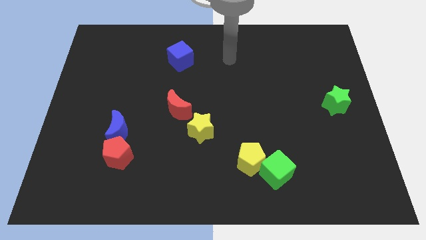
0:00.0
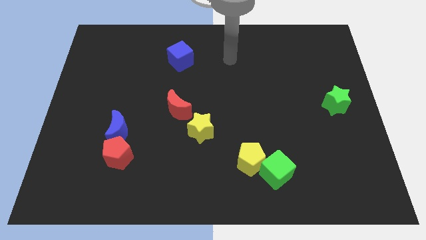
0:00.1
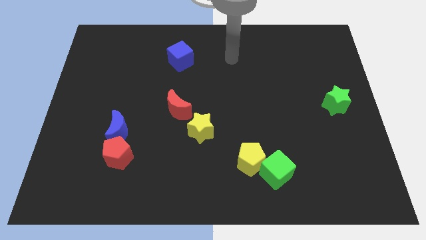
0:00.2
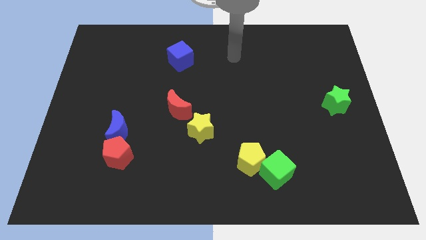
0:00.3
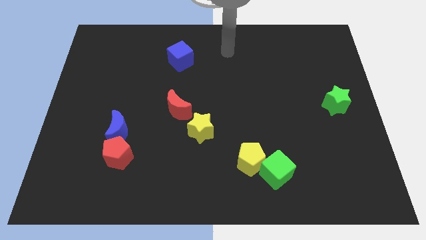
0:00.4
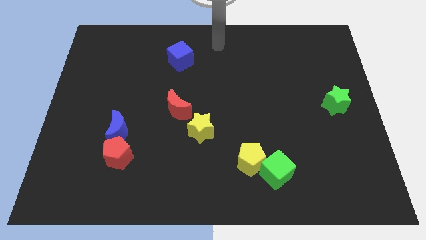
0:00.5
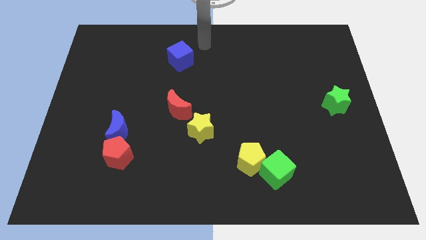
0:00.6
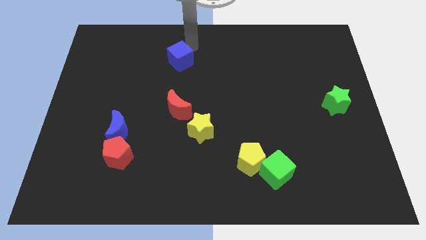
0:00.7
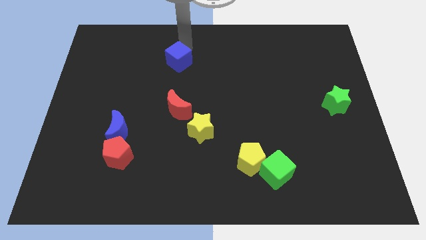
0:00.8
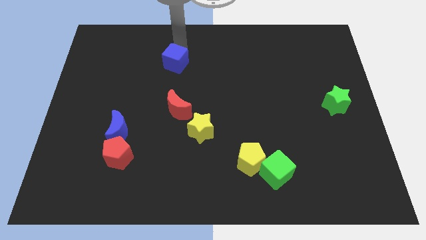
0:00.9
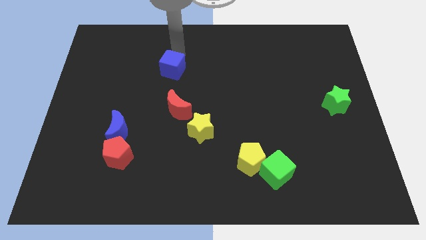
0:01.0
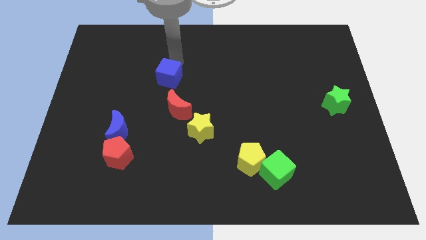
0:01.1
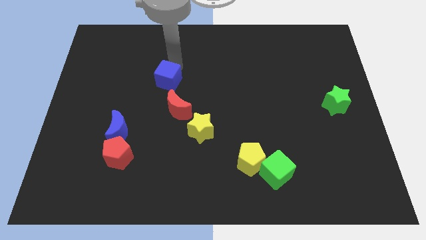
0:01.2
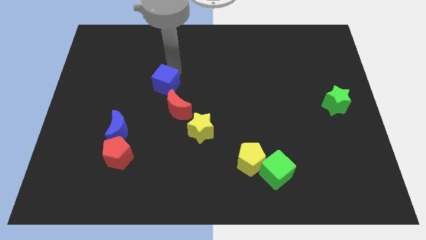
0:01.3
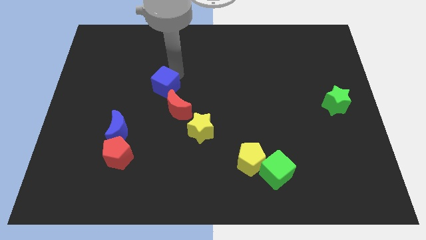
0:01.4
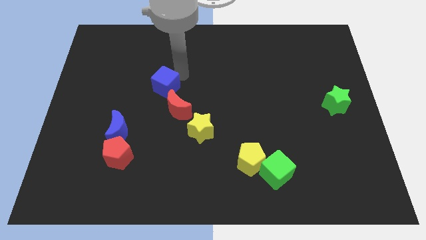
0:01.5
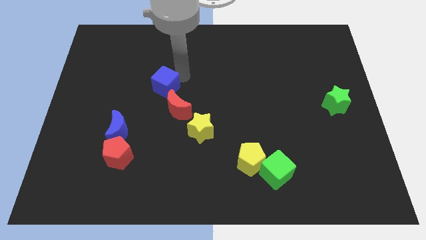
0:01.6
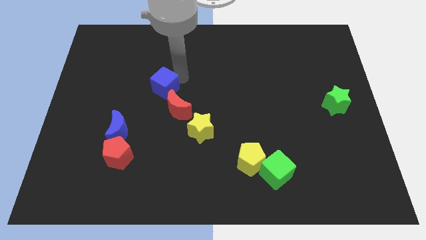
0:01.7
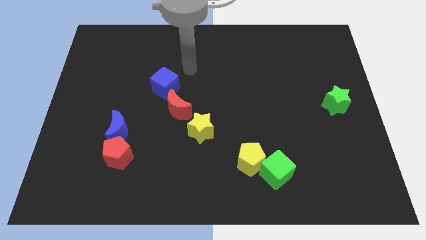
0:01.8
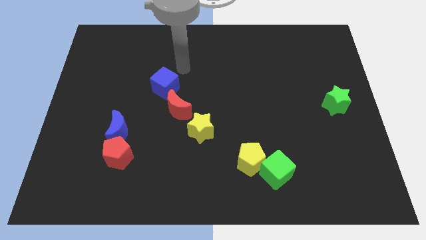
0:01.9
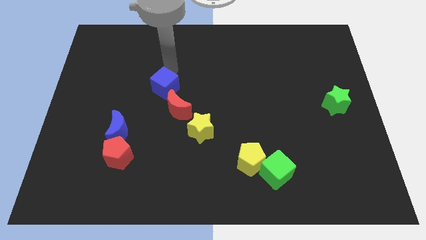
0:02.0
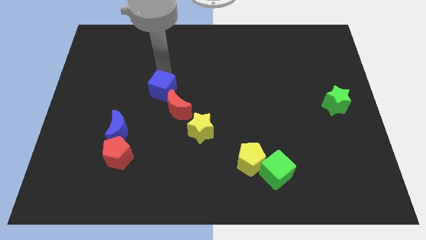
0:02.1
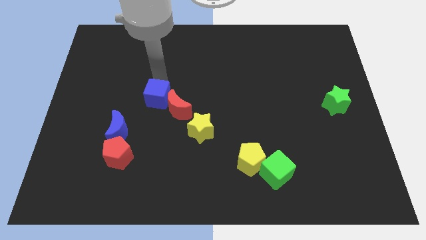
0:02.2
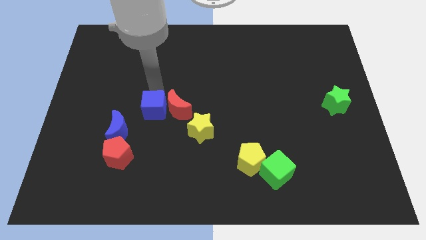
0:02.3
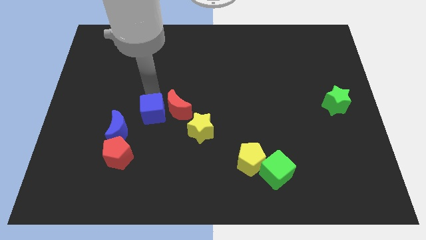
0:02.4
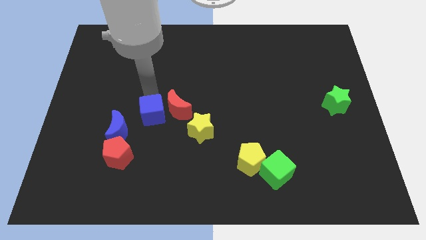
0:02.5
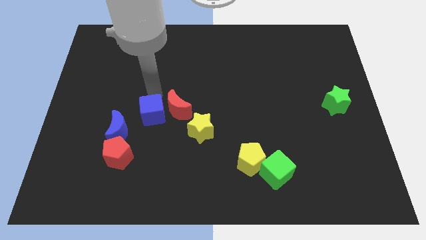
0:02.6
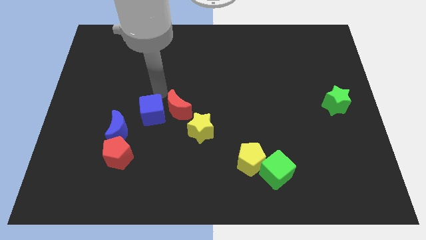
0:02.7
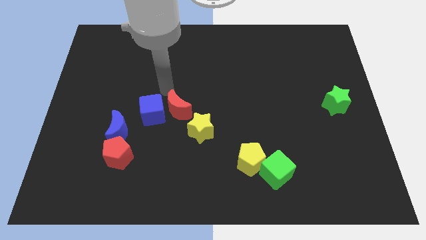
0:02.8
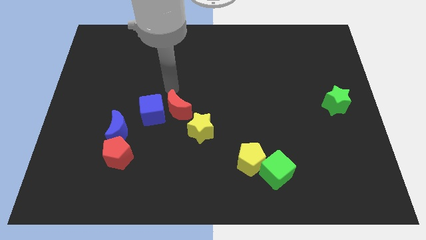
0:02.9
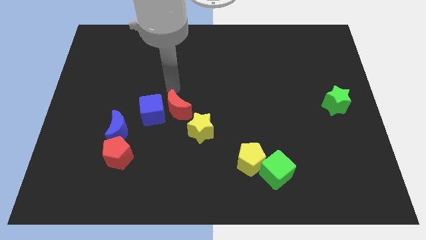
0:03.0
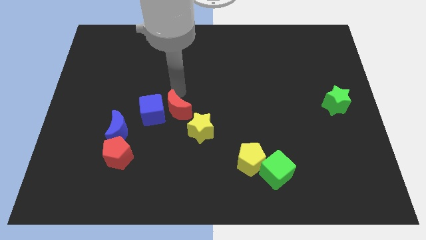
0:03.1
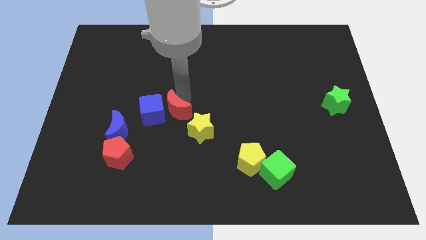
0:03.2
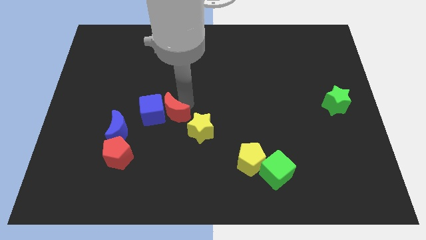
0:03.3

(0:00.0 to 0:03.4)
place the blue cube to the left of the red moon

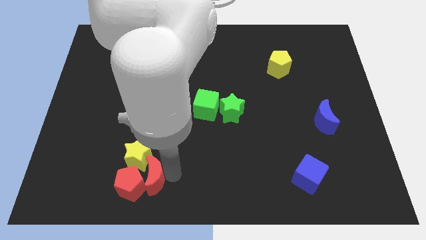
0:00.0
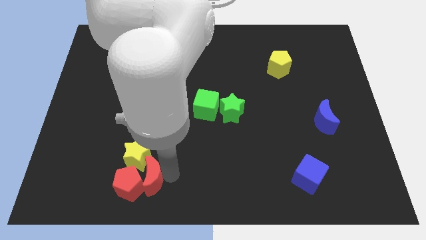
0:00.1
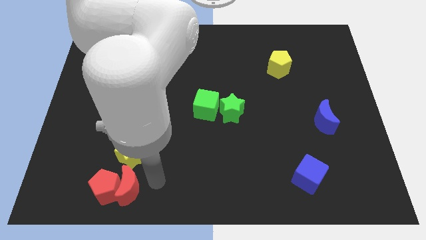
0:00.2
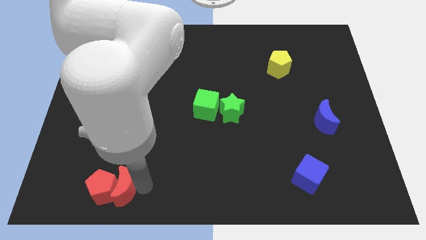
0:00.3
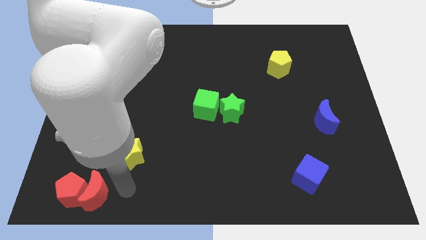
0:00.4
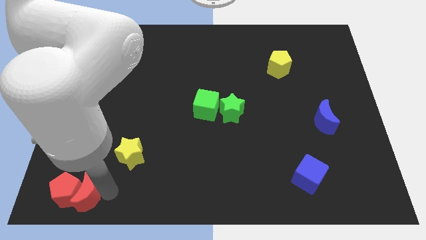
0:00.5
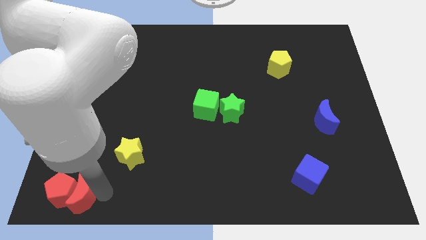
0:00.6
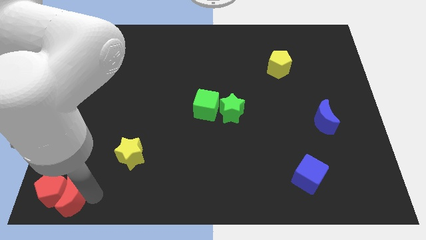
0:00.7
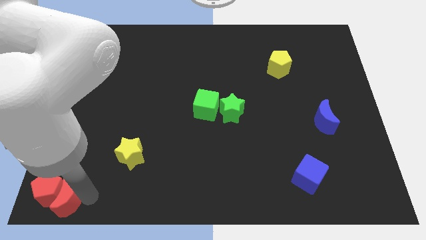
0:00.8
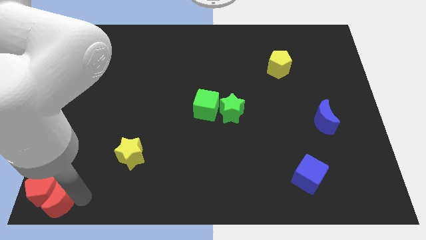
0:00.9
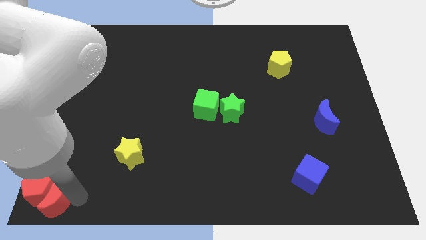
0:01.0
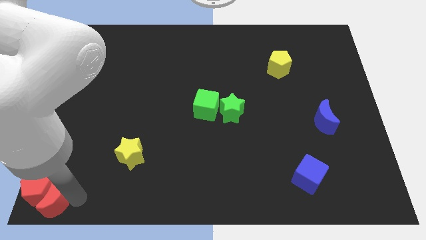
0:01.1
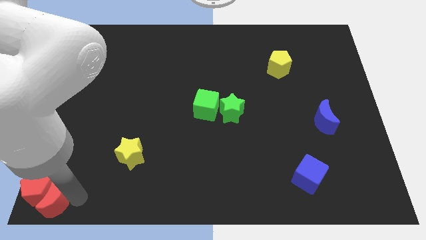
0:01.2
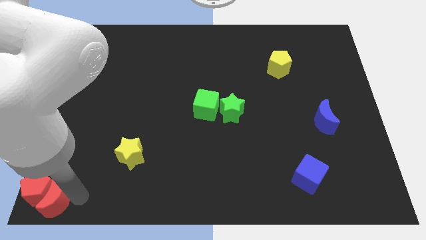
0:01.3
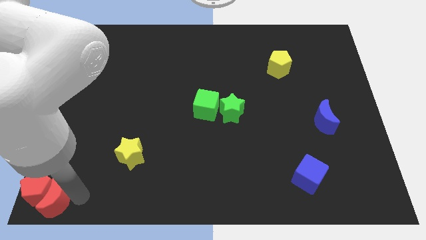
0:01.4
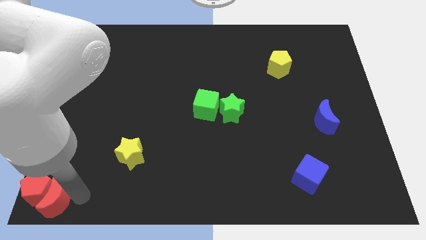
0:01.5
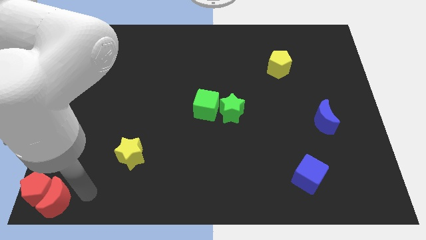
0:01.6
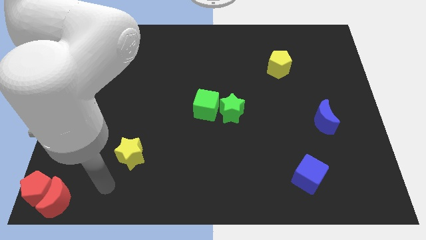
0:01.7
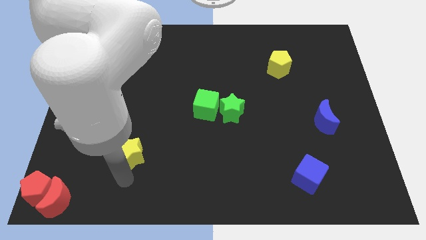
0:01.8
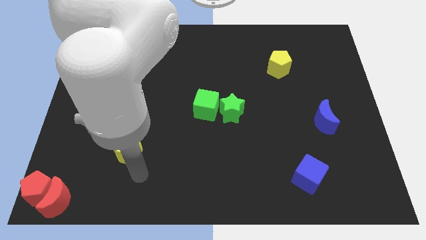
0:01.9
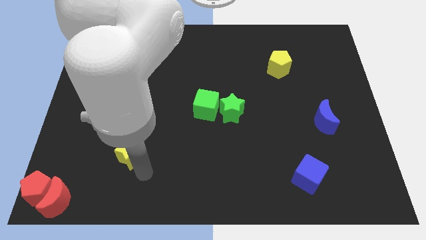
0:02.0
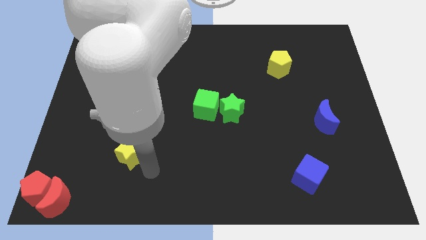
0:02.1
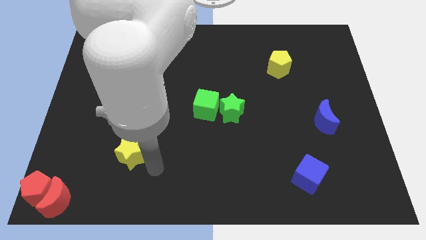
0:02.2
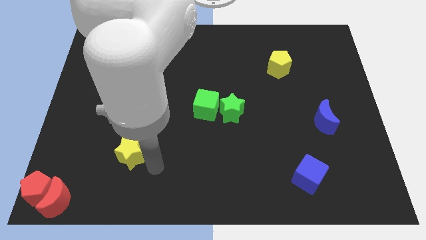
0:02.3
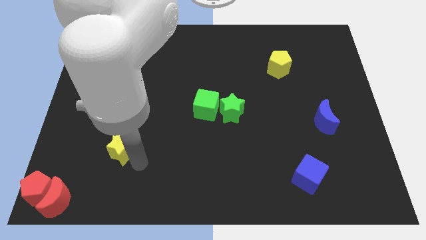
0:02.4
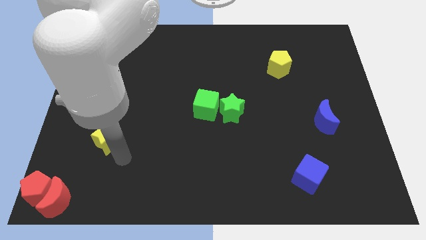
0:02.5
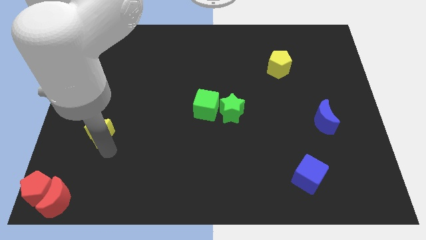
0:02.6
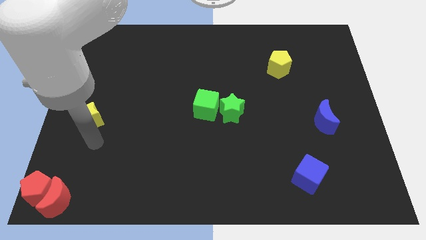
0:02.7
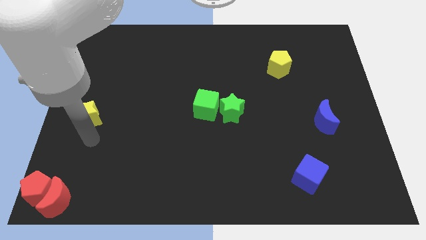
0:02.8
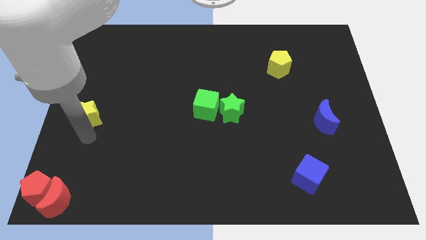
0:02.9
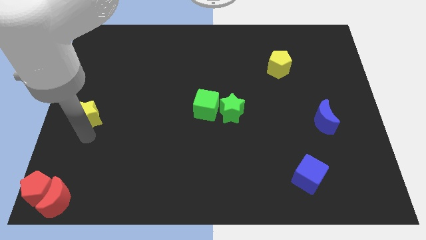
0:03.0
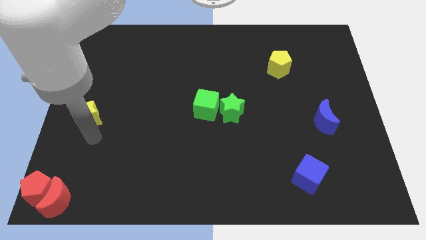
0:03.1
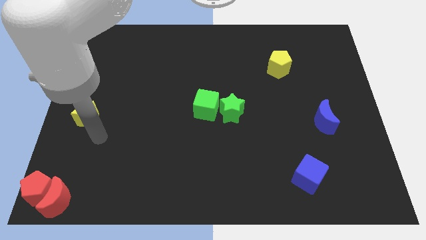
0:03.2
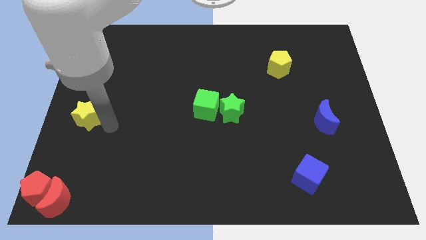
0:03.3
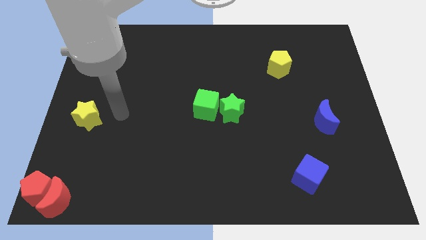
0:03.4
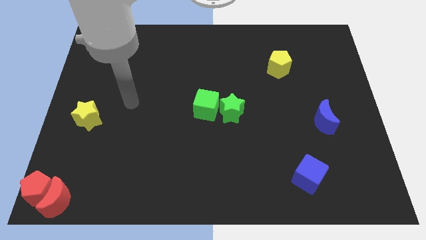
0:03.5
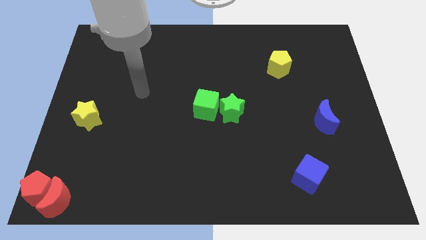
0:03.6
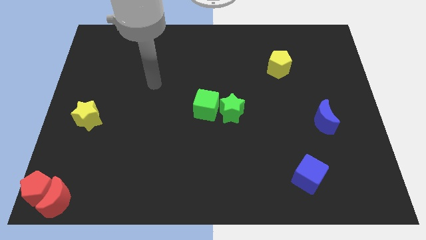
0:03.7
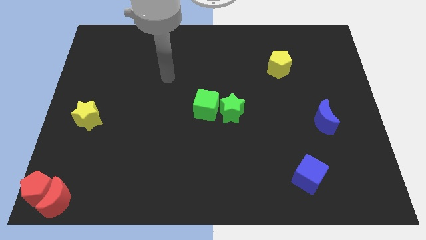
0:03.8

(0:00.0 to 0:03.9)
push the yellow star above red crescent

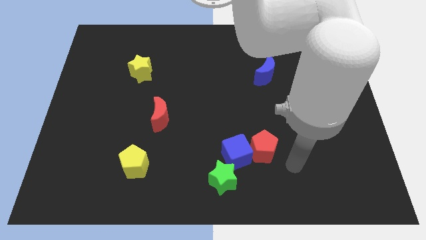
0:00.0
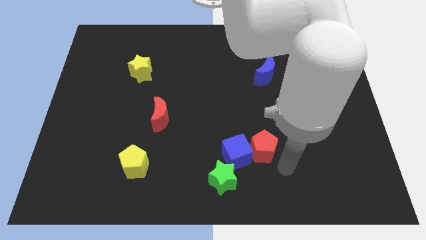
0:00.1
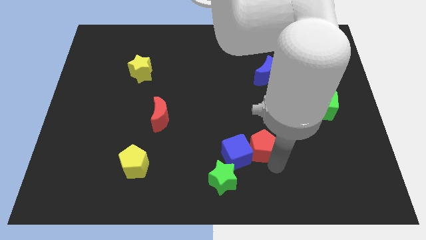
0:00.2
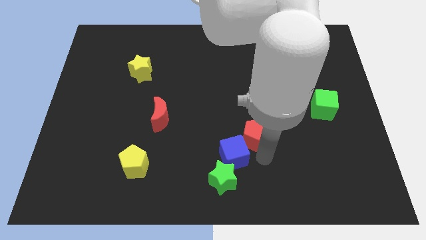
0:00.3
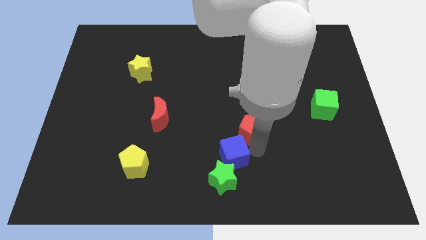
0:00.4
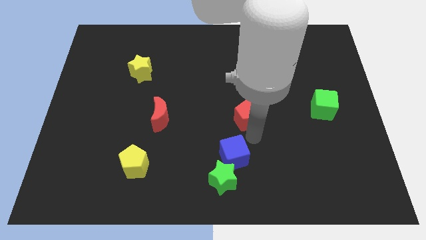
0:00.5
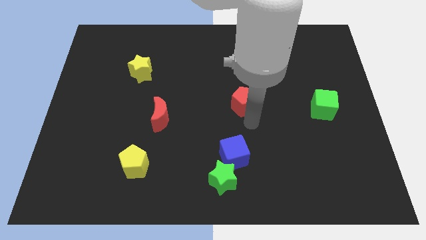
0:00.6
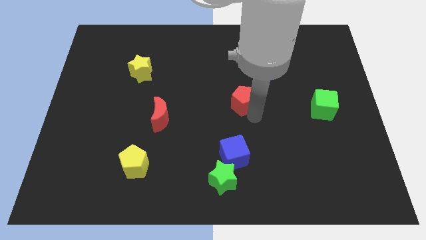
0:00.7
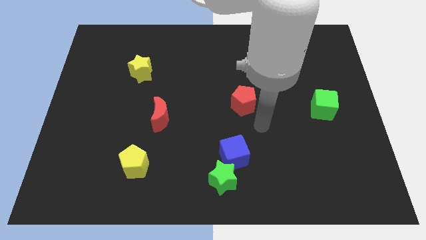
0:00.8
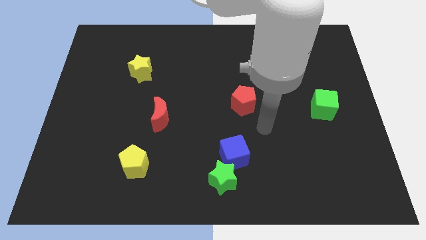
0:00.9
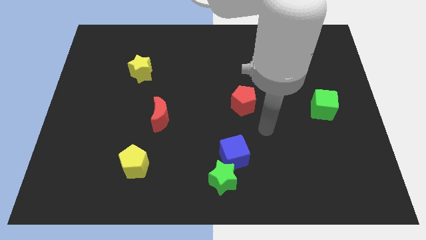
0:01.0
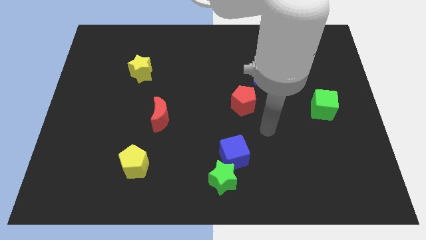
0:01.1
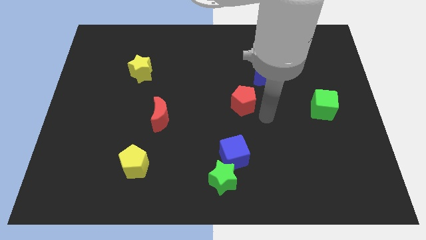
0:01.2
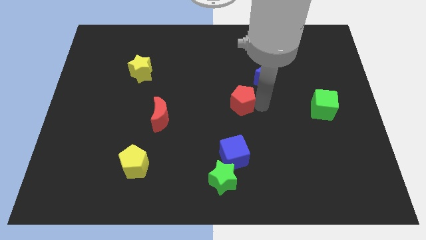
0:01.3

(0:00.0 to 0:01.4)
place the red pentagon to the middle of the board

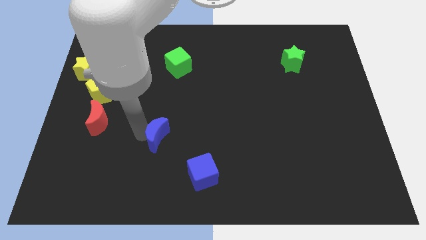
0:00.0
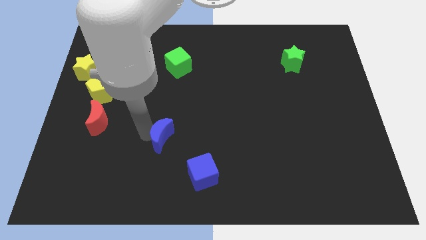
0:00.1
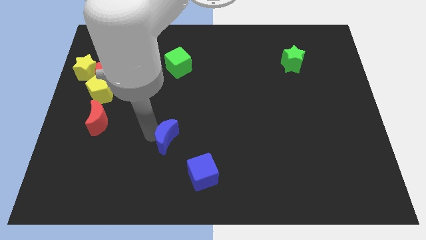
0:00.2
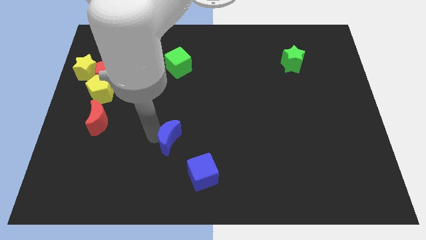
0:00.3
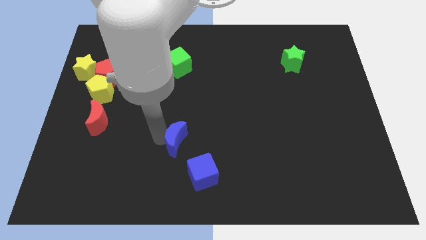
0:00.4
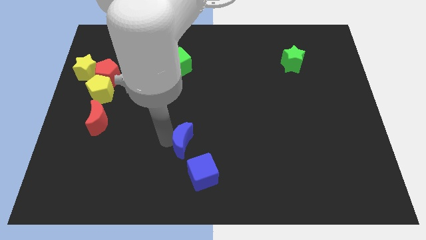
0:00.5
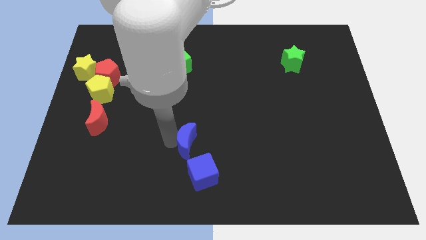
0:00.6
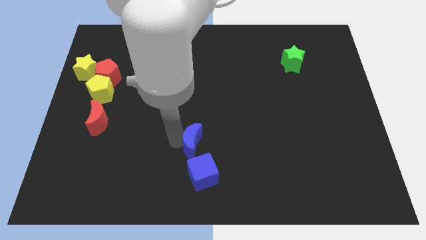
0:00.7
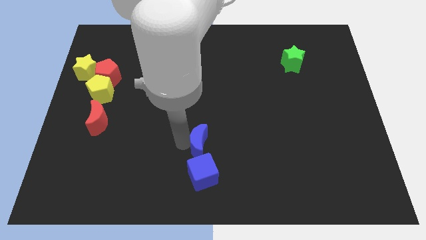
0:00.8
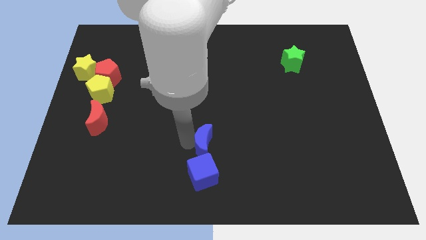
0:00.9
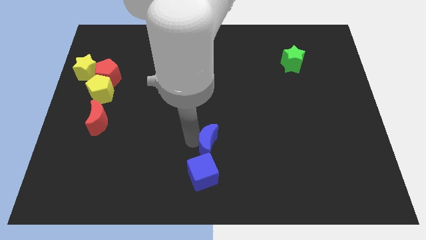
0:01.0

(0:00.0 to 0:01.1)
place the blue moon above the blue square
